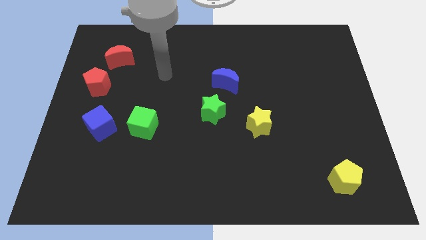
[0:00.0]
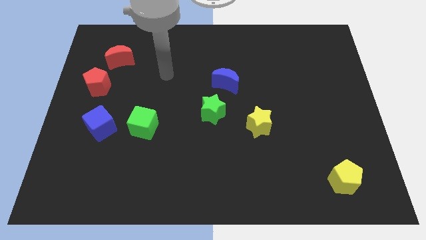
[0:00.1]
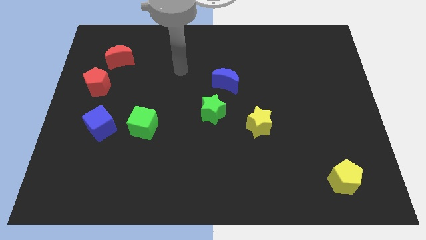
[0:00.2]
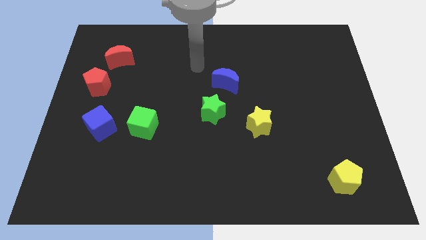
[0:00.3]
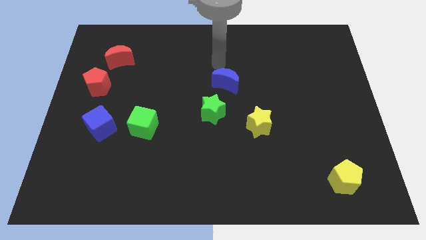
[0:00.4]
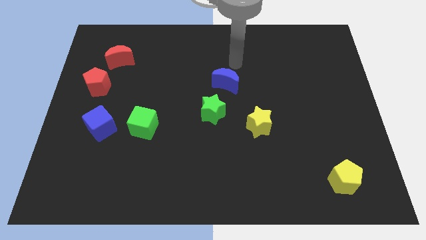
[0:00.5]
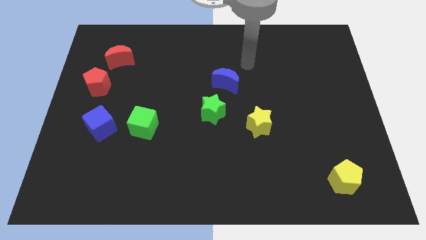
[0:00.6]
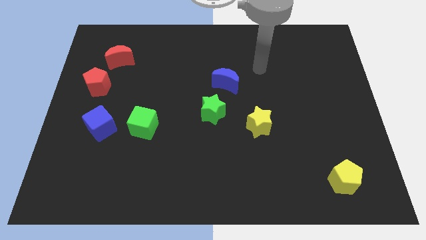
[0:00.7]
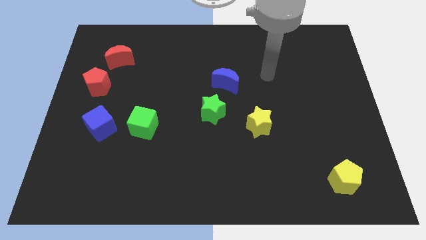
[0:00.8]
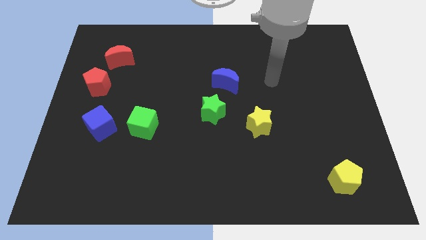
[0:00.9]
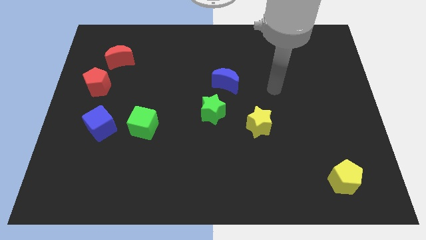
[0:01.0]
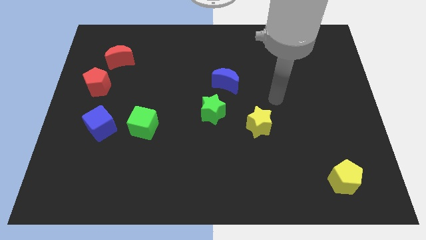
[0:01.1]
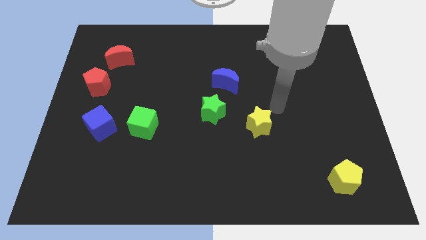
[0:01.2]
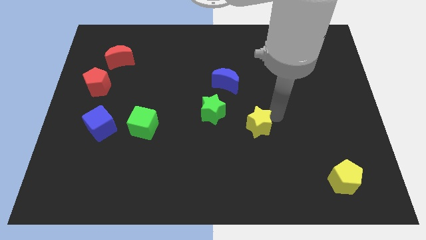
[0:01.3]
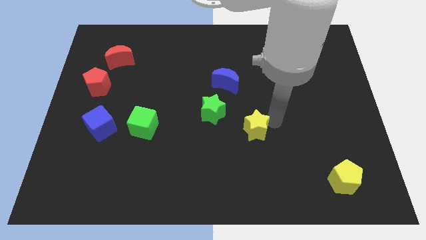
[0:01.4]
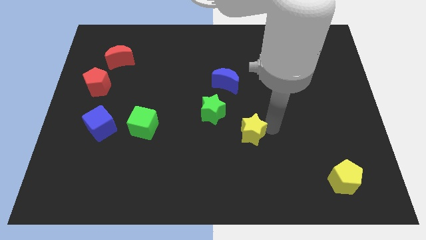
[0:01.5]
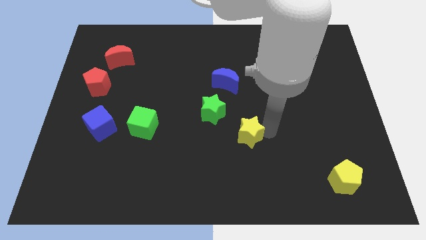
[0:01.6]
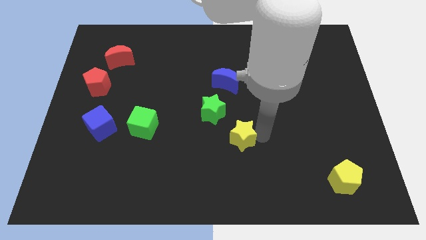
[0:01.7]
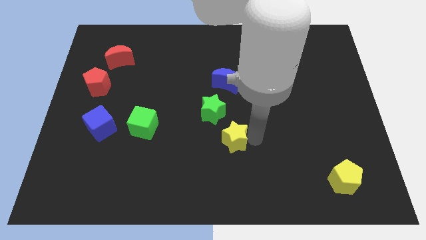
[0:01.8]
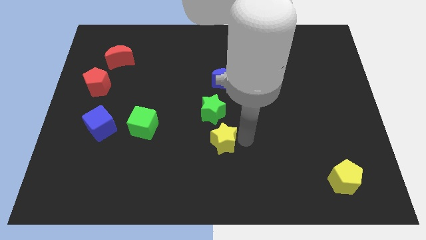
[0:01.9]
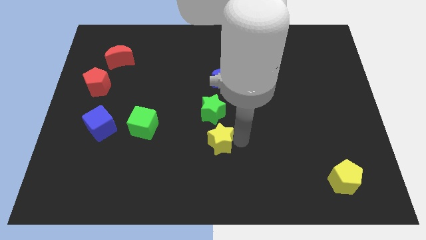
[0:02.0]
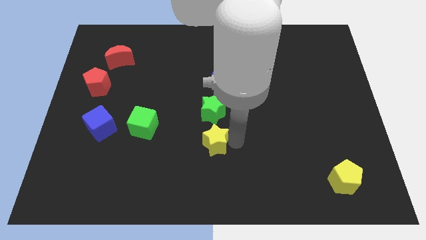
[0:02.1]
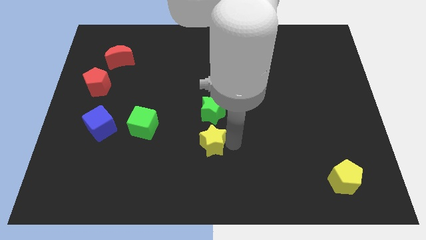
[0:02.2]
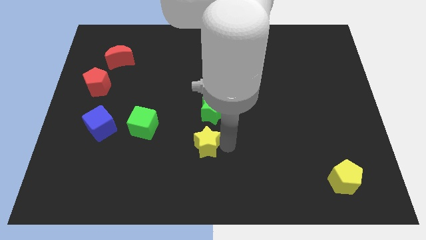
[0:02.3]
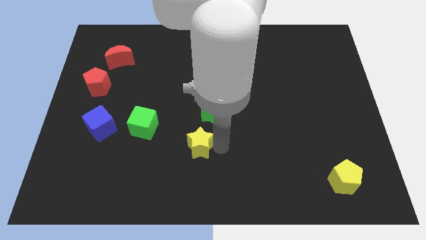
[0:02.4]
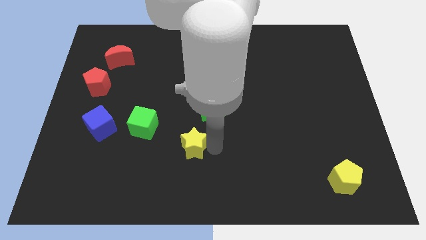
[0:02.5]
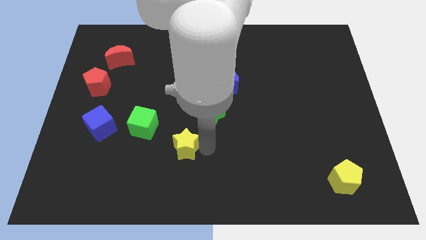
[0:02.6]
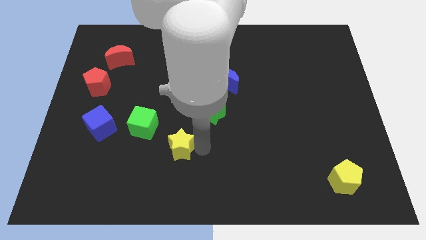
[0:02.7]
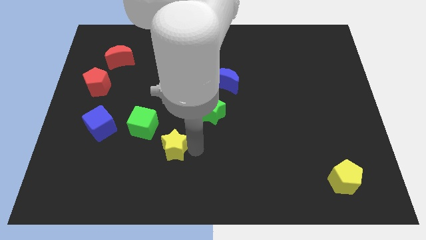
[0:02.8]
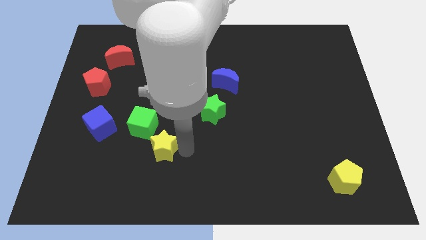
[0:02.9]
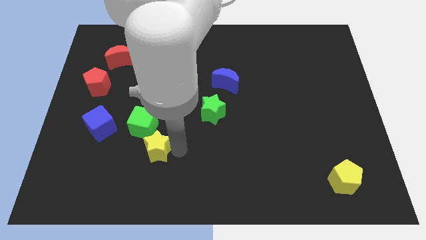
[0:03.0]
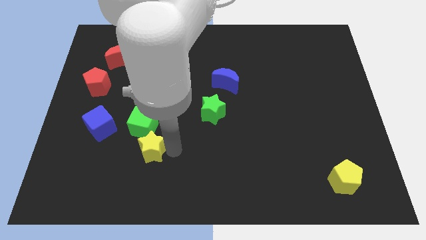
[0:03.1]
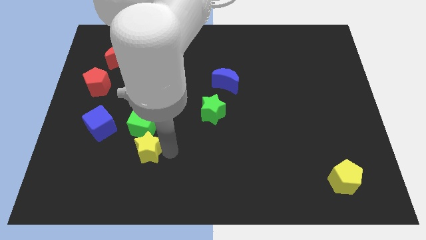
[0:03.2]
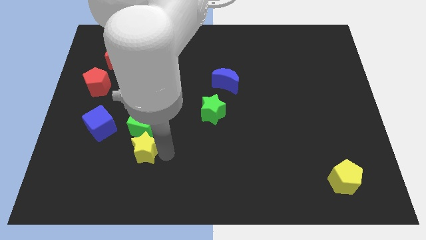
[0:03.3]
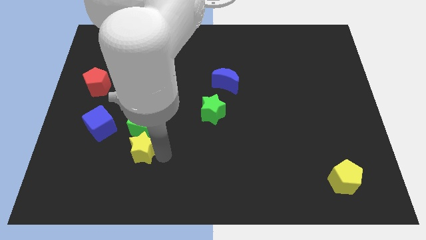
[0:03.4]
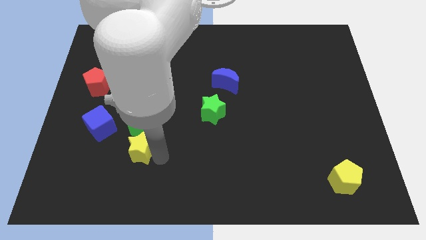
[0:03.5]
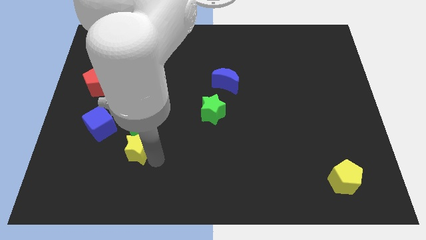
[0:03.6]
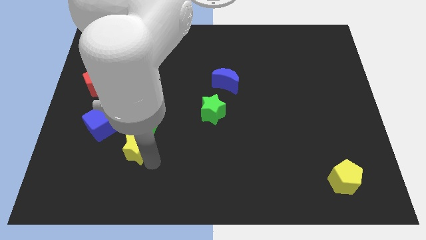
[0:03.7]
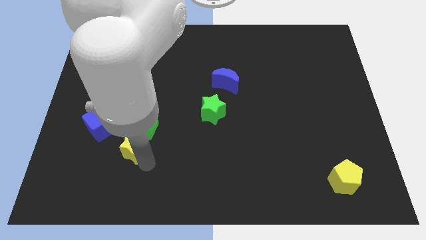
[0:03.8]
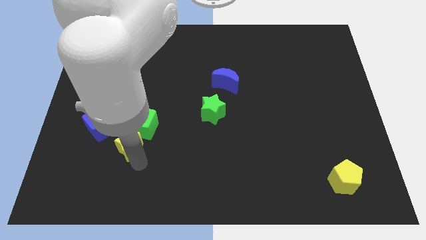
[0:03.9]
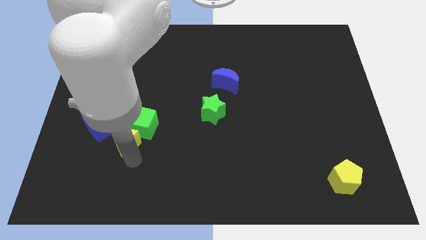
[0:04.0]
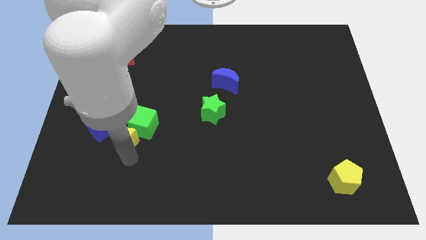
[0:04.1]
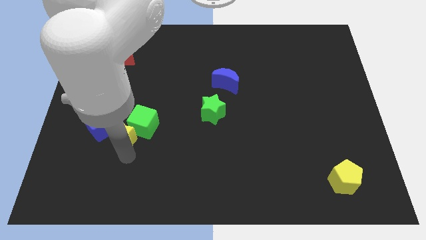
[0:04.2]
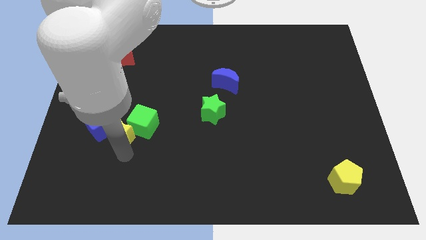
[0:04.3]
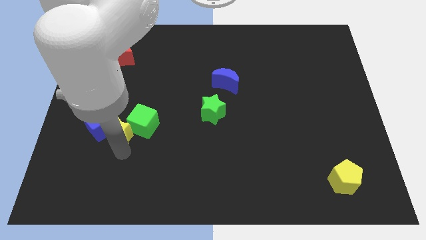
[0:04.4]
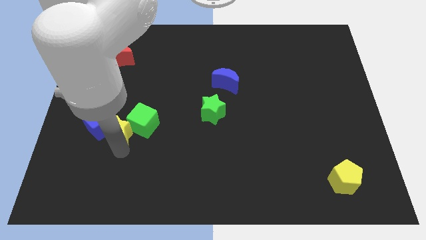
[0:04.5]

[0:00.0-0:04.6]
slide the yellow star next to the blue cube

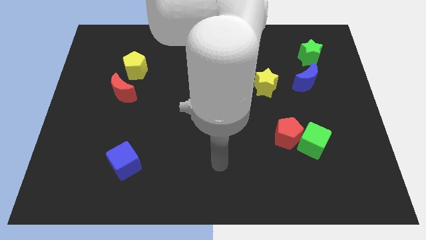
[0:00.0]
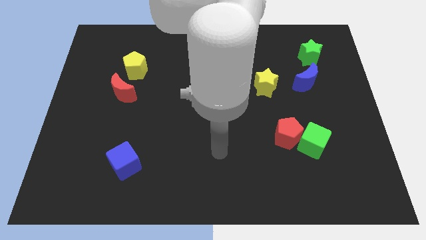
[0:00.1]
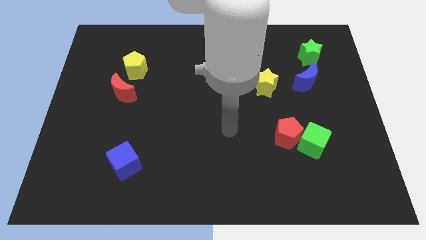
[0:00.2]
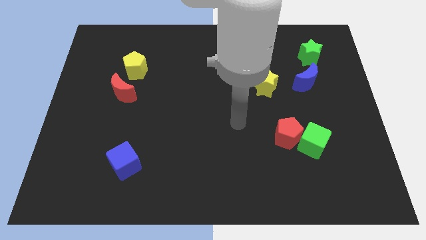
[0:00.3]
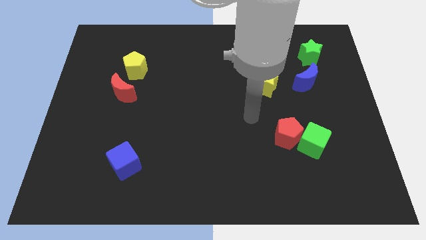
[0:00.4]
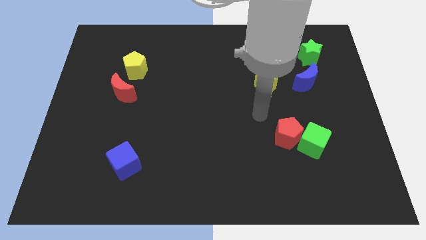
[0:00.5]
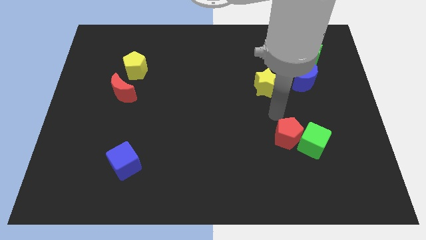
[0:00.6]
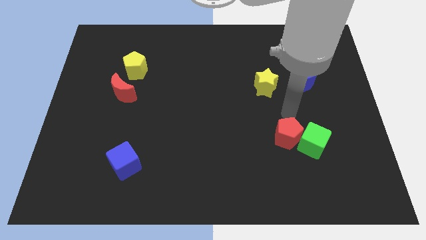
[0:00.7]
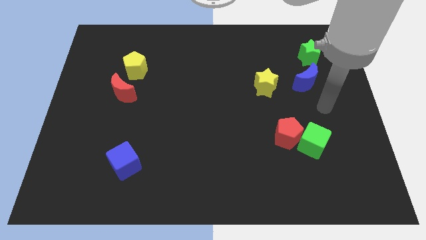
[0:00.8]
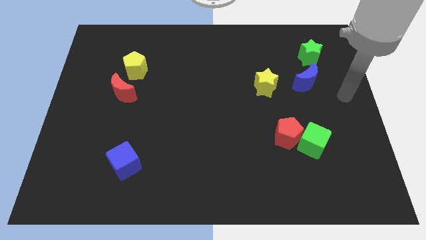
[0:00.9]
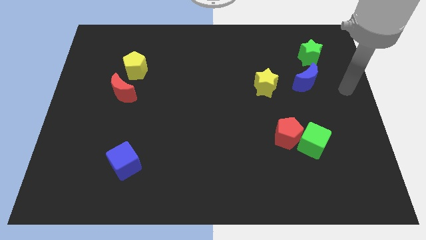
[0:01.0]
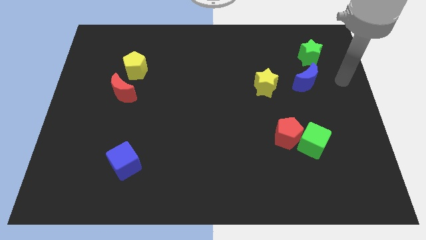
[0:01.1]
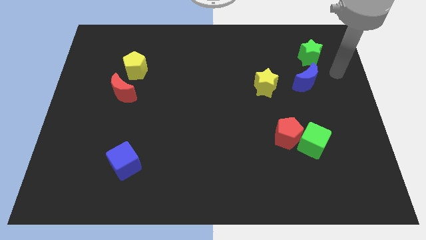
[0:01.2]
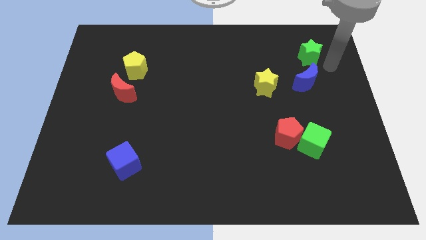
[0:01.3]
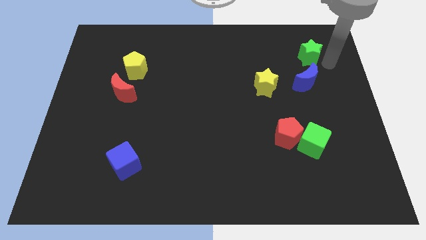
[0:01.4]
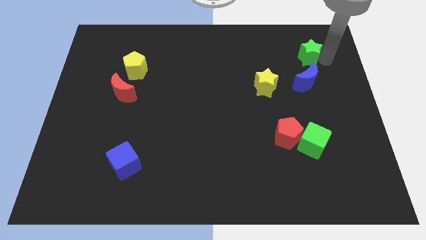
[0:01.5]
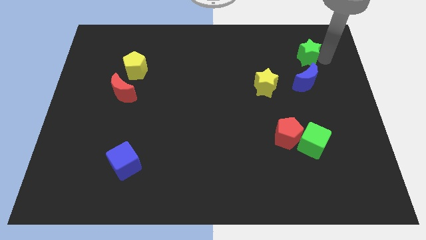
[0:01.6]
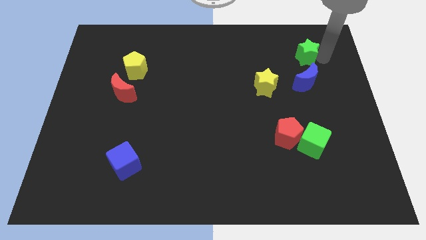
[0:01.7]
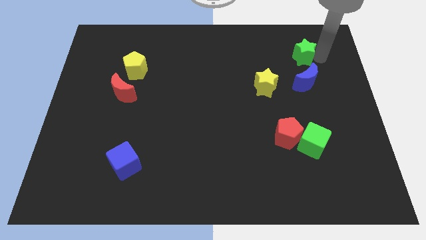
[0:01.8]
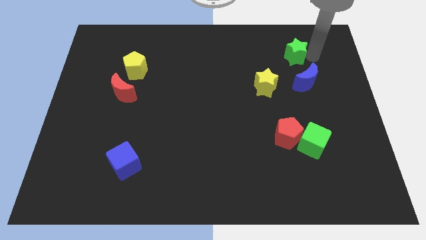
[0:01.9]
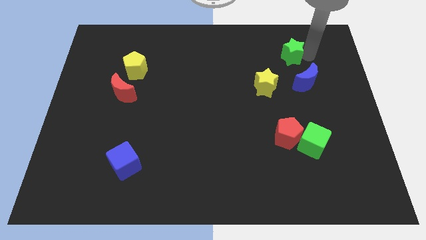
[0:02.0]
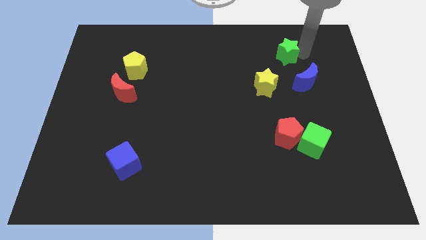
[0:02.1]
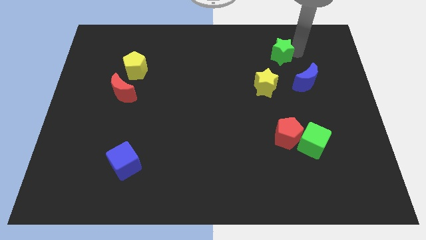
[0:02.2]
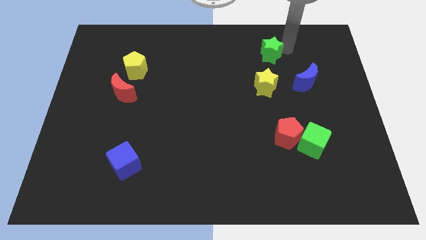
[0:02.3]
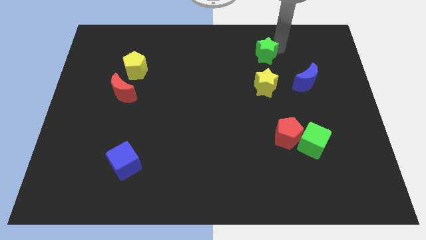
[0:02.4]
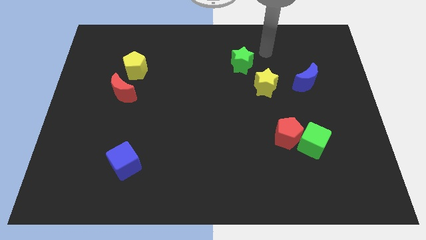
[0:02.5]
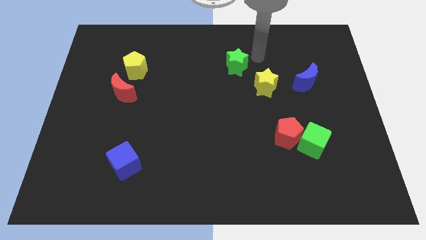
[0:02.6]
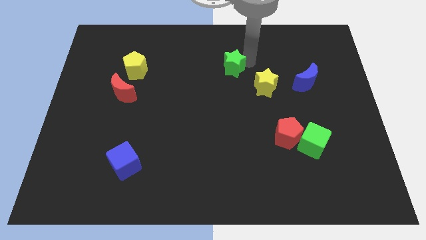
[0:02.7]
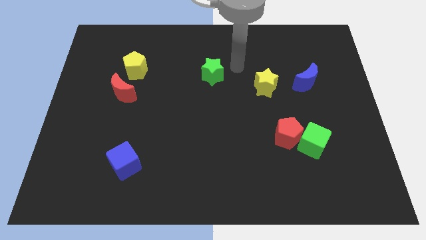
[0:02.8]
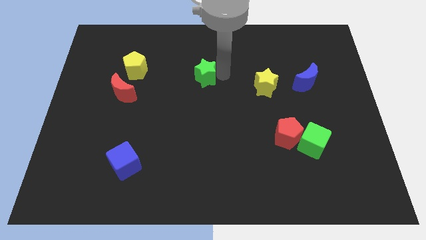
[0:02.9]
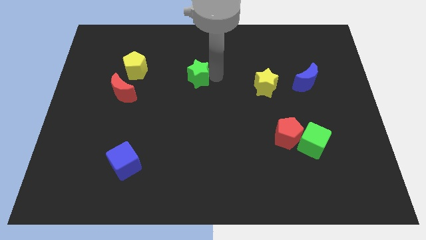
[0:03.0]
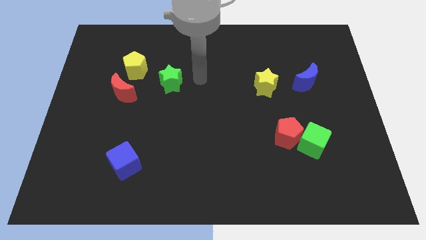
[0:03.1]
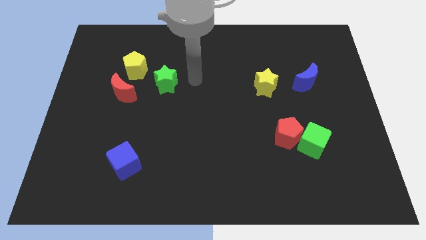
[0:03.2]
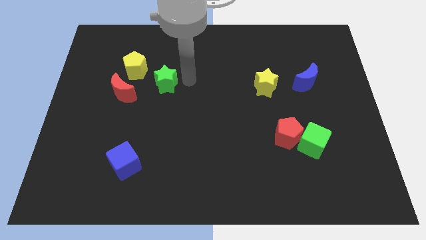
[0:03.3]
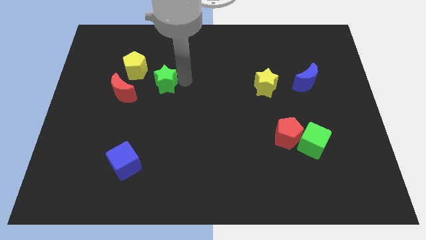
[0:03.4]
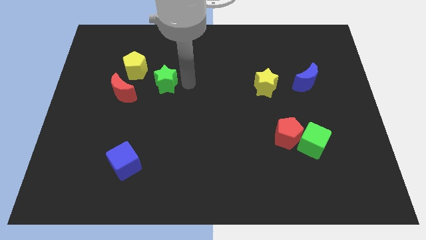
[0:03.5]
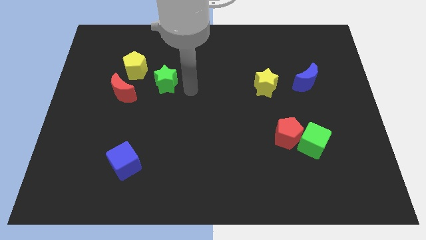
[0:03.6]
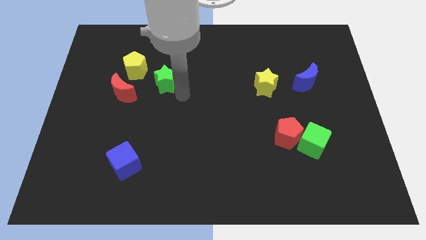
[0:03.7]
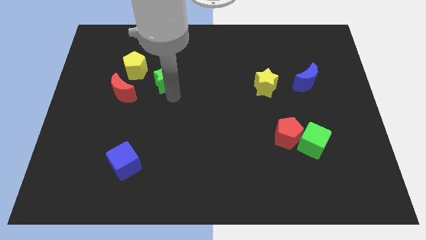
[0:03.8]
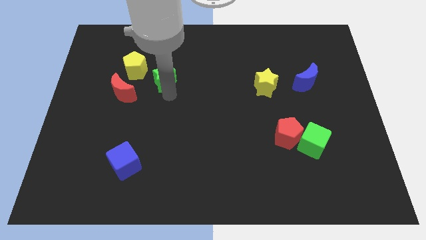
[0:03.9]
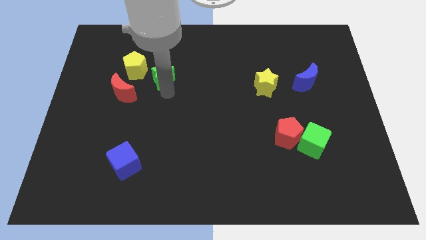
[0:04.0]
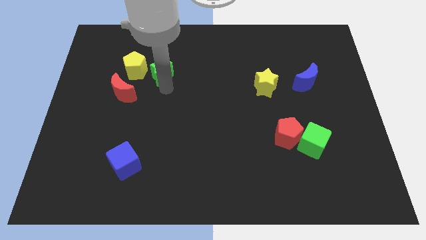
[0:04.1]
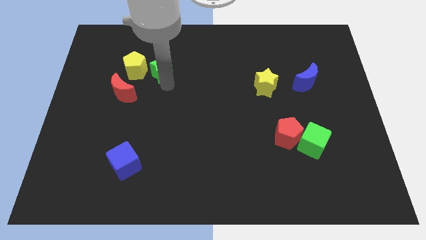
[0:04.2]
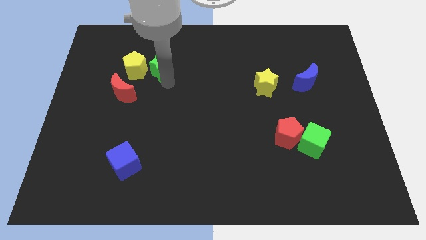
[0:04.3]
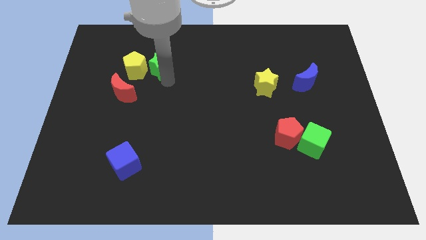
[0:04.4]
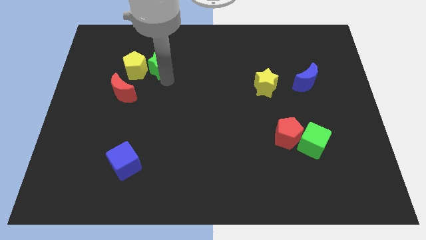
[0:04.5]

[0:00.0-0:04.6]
slide the green star close to the yellow pentagon
